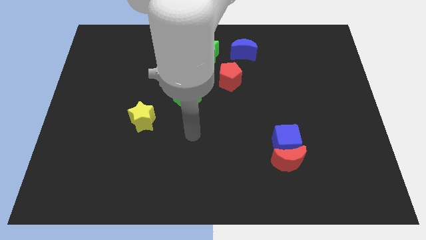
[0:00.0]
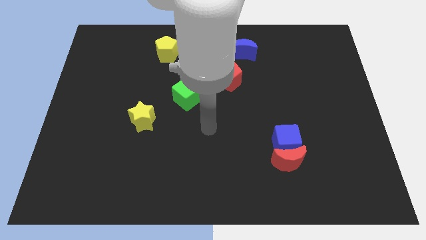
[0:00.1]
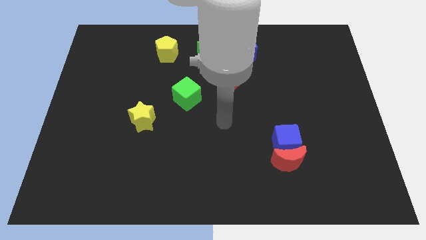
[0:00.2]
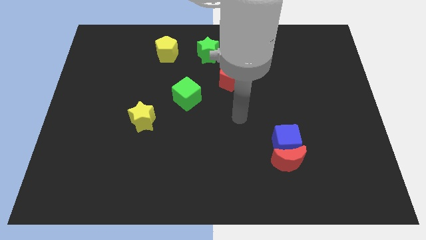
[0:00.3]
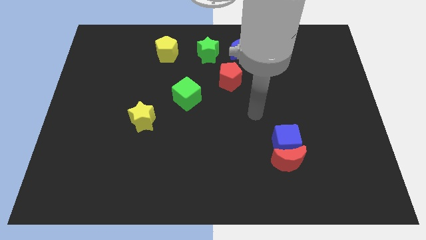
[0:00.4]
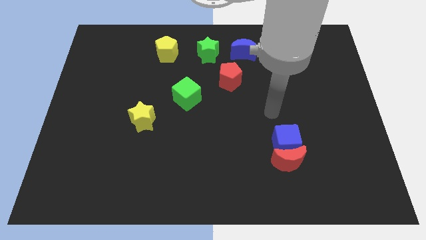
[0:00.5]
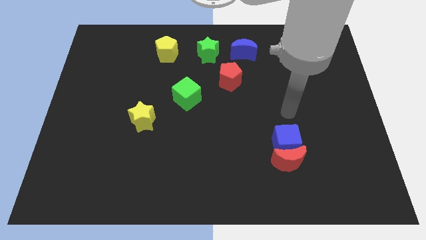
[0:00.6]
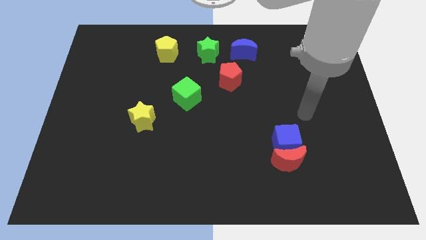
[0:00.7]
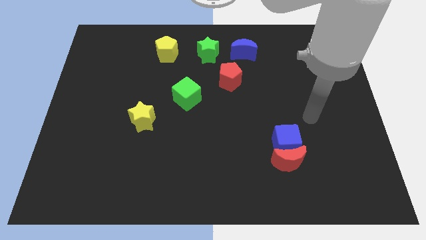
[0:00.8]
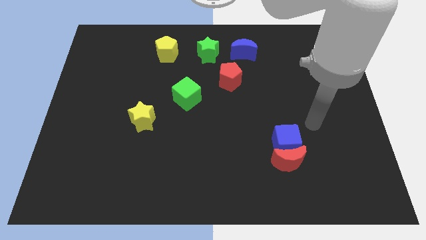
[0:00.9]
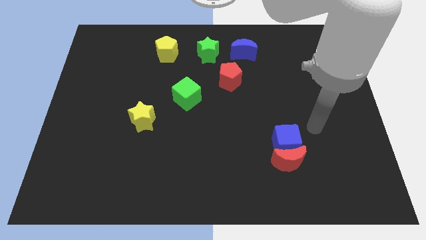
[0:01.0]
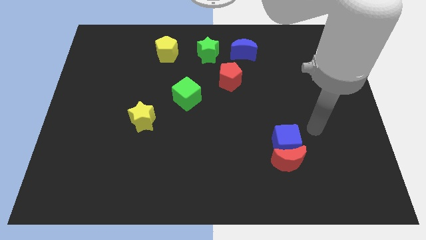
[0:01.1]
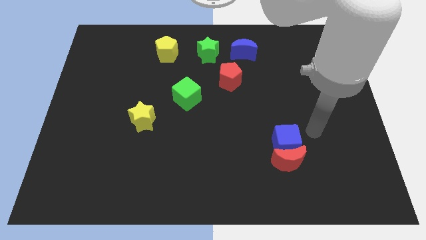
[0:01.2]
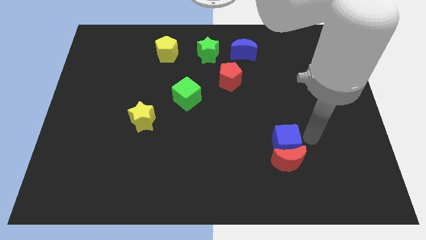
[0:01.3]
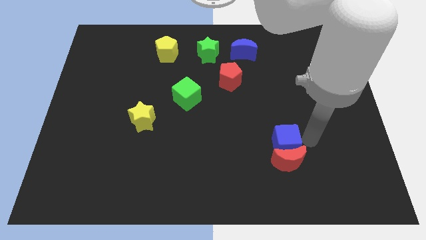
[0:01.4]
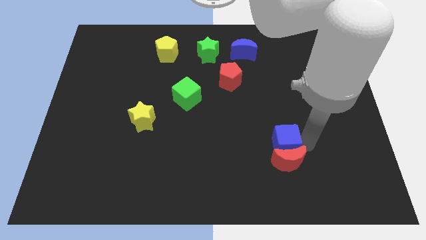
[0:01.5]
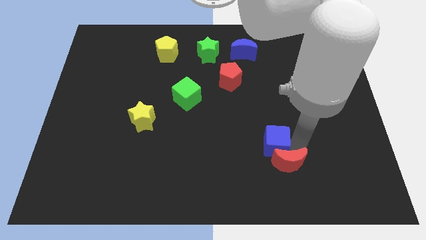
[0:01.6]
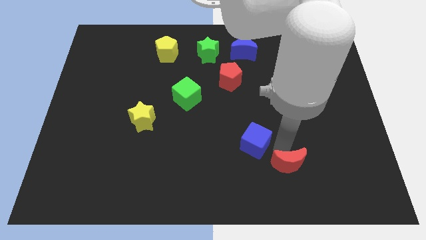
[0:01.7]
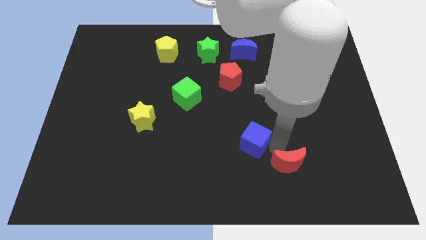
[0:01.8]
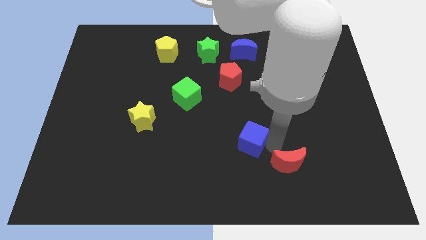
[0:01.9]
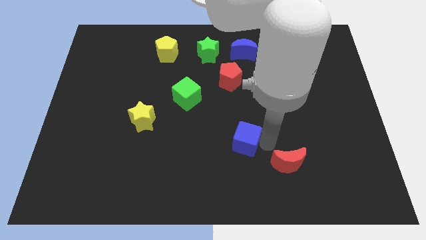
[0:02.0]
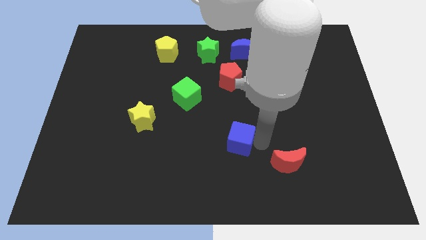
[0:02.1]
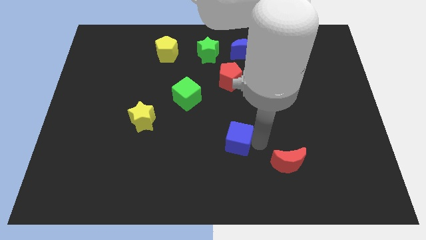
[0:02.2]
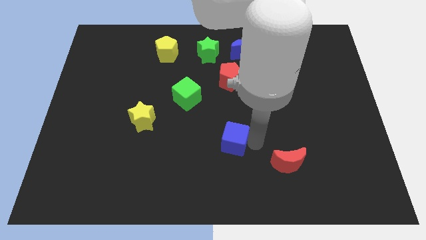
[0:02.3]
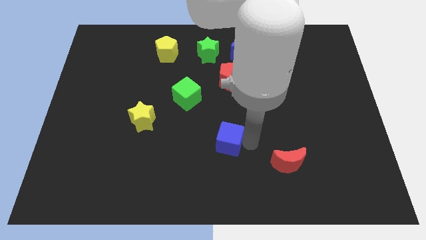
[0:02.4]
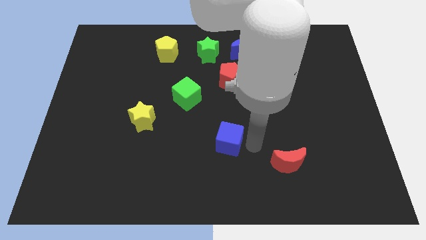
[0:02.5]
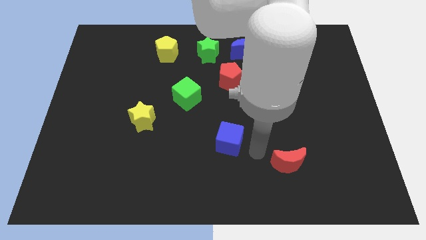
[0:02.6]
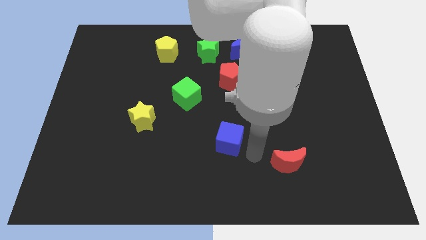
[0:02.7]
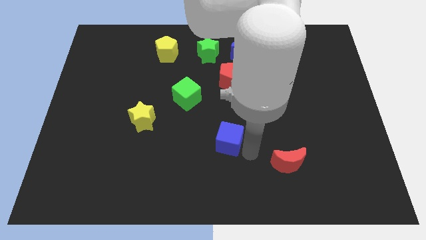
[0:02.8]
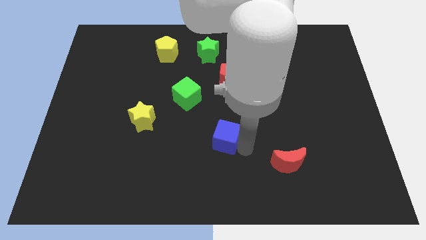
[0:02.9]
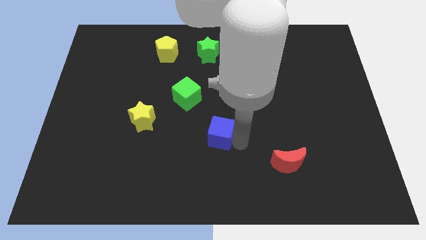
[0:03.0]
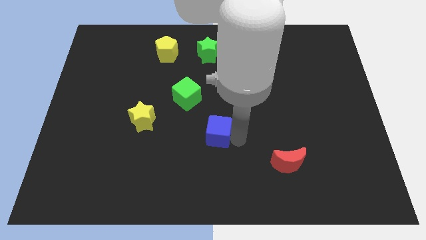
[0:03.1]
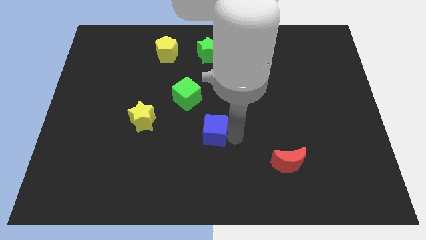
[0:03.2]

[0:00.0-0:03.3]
separate the blue cube from red crescent

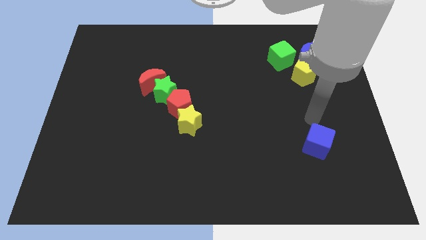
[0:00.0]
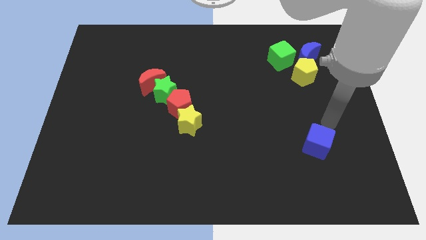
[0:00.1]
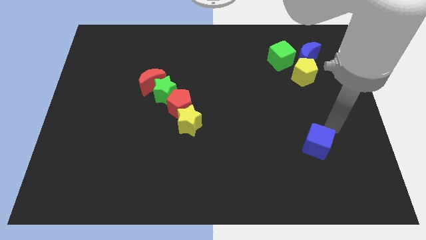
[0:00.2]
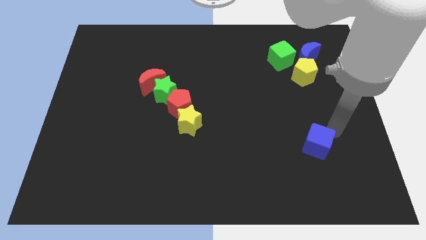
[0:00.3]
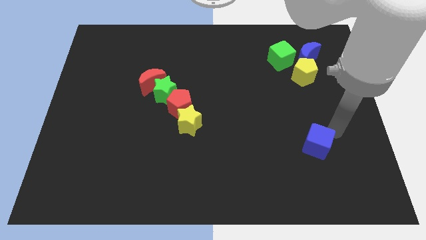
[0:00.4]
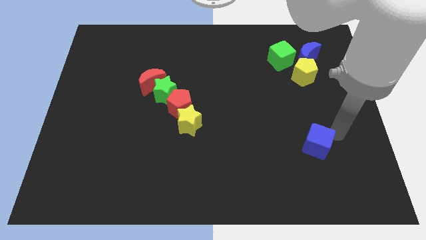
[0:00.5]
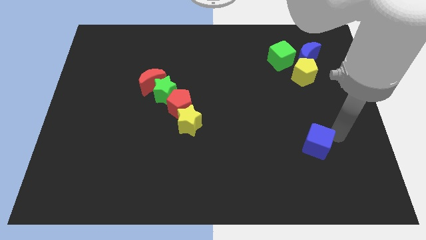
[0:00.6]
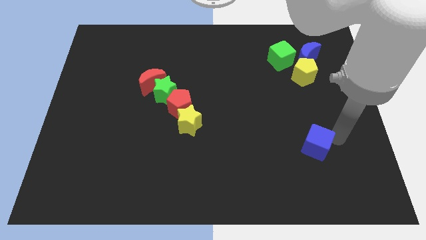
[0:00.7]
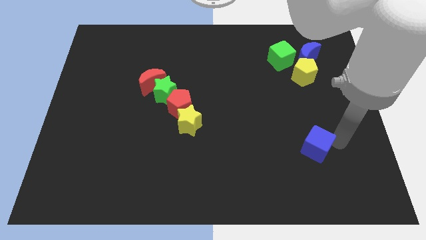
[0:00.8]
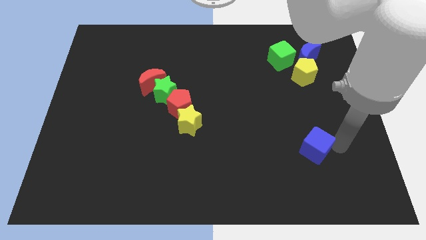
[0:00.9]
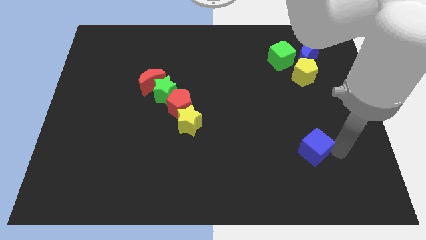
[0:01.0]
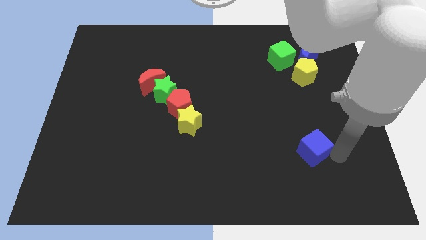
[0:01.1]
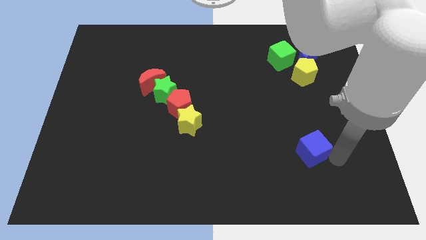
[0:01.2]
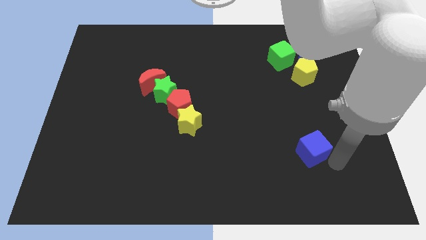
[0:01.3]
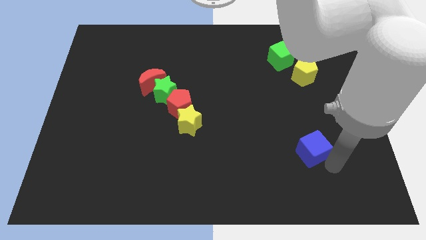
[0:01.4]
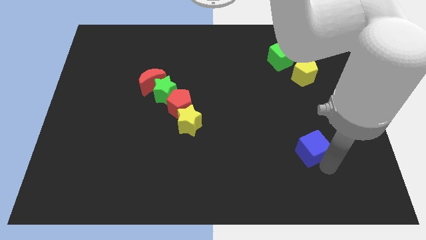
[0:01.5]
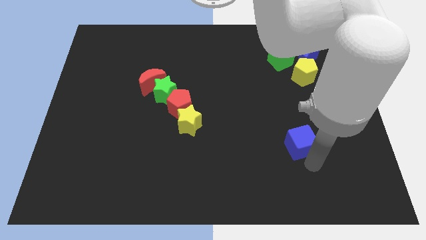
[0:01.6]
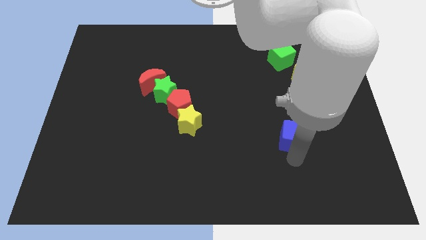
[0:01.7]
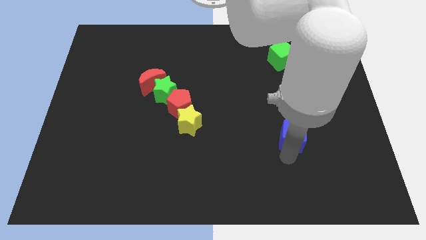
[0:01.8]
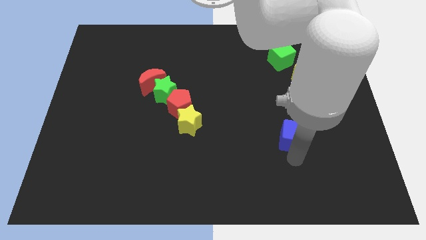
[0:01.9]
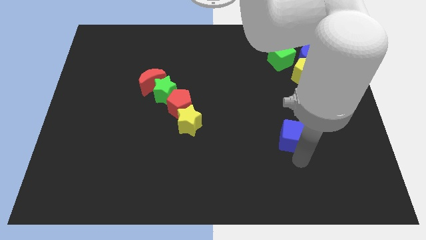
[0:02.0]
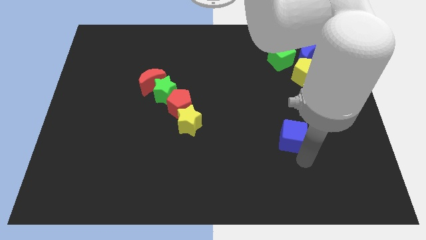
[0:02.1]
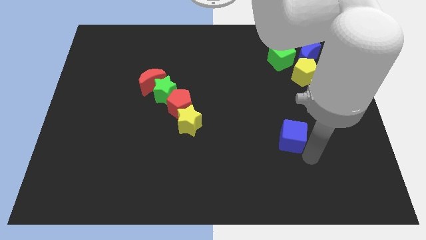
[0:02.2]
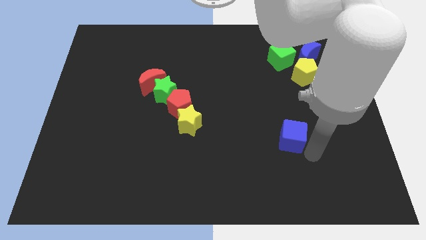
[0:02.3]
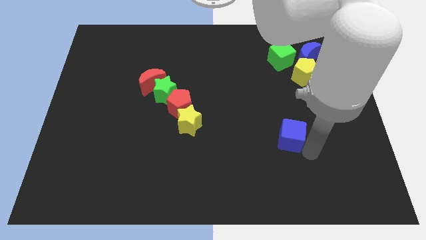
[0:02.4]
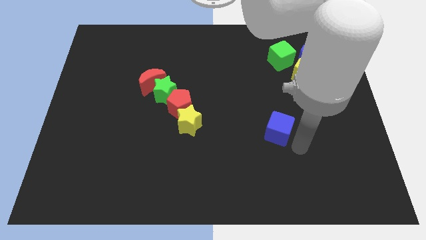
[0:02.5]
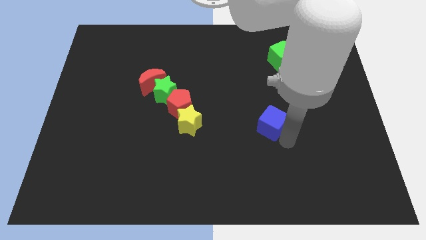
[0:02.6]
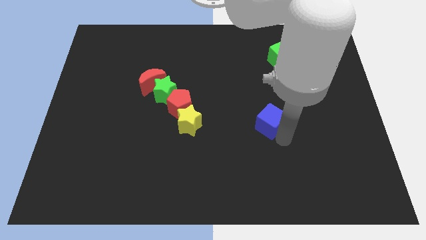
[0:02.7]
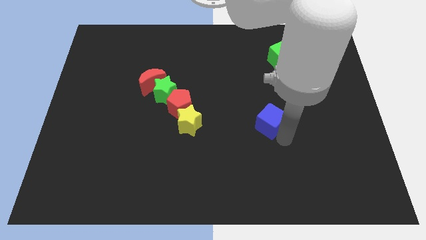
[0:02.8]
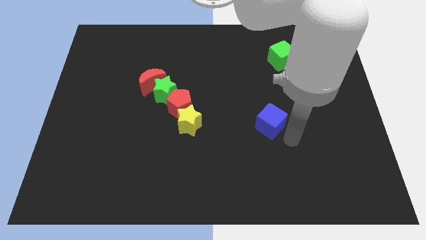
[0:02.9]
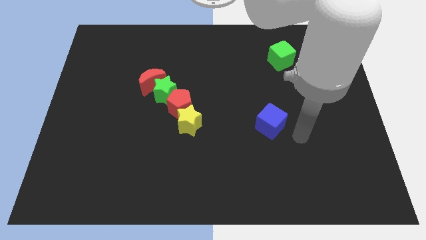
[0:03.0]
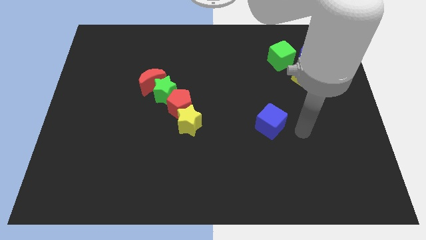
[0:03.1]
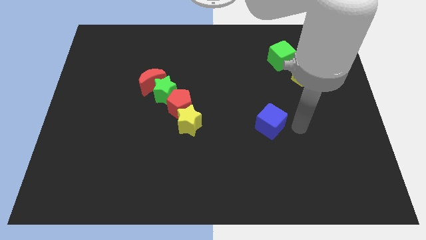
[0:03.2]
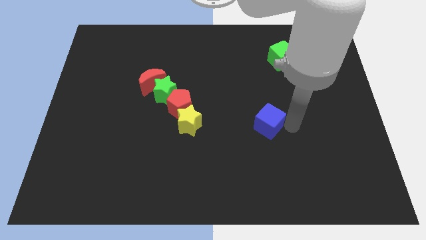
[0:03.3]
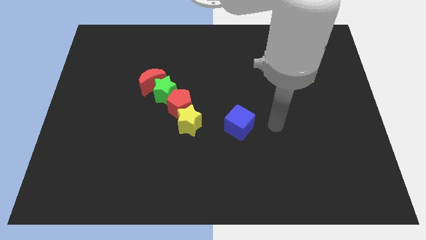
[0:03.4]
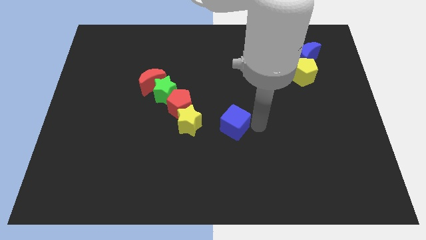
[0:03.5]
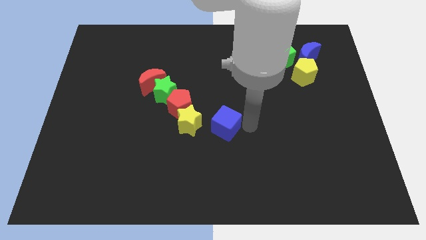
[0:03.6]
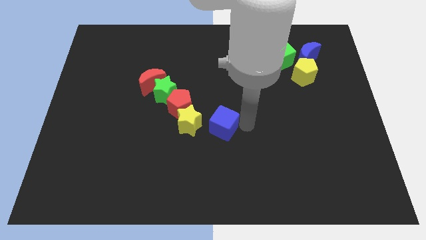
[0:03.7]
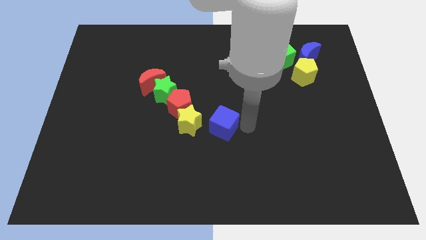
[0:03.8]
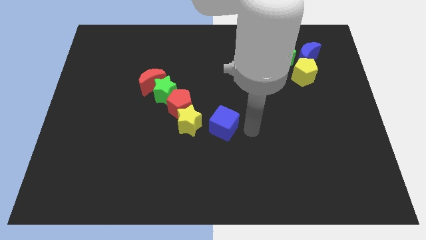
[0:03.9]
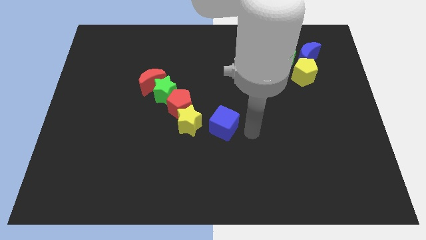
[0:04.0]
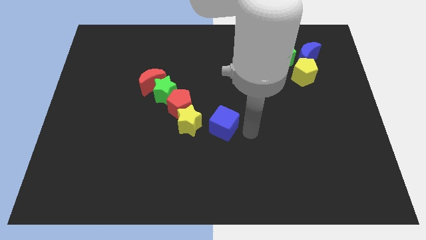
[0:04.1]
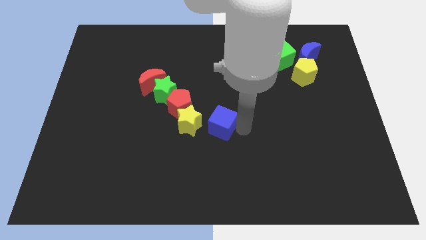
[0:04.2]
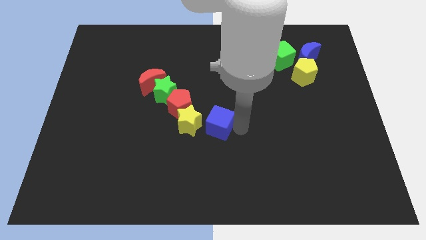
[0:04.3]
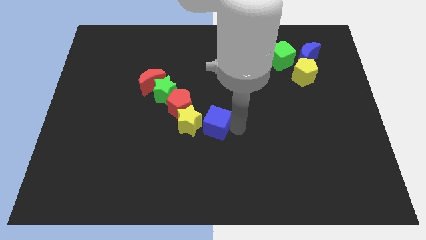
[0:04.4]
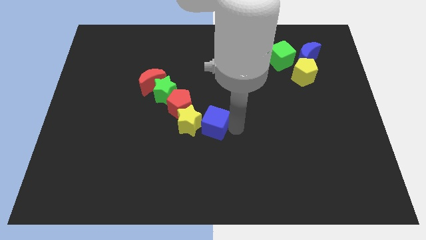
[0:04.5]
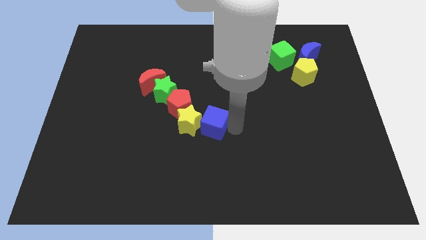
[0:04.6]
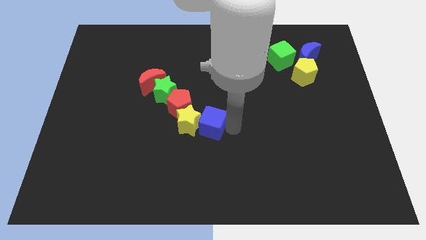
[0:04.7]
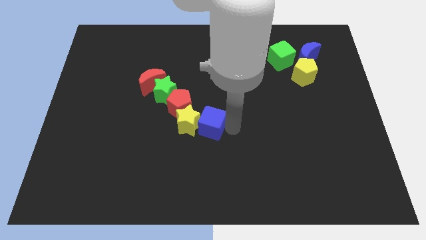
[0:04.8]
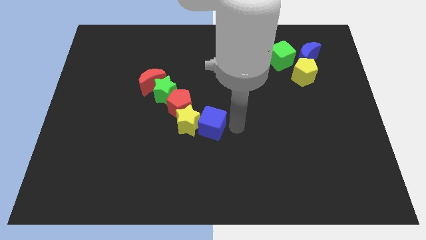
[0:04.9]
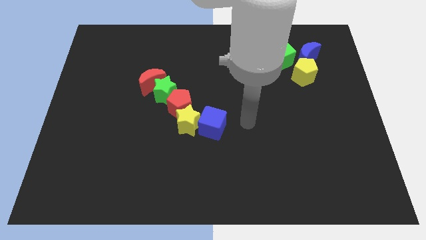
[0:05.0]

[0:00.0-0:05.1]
move the blue cube to the bottom center of the board

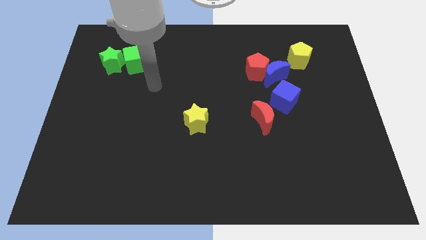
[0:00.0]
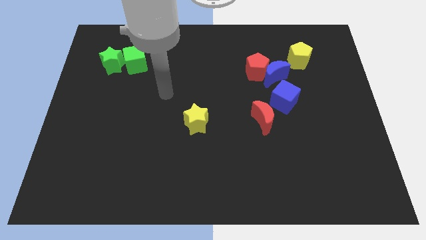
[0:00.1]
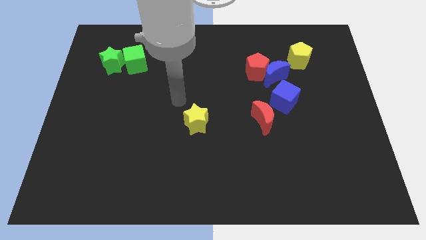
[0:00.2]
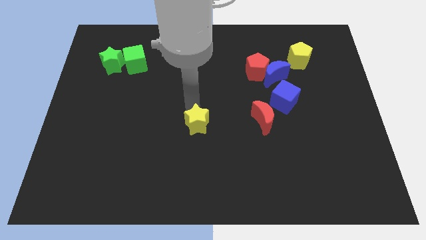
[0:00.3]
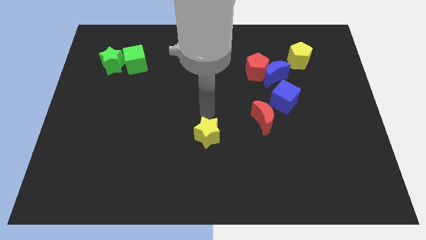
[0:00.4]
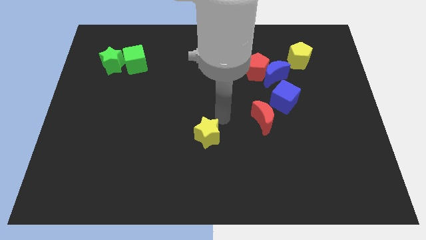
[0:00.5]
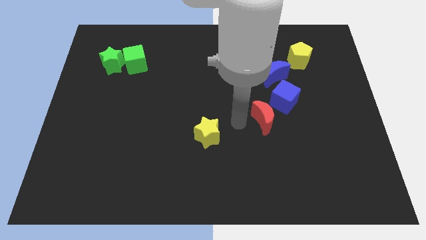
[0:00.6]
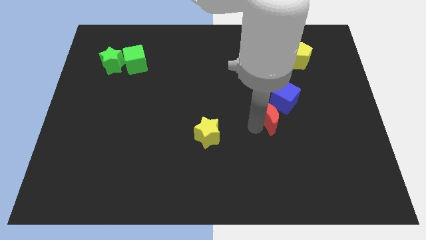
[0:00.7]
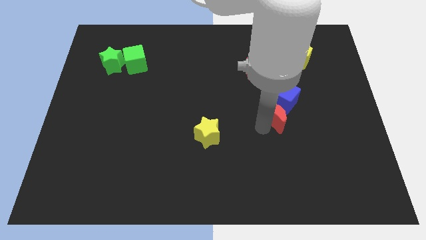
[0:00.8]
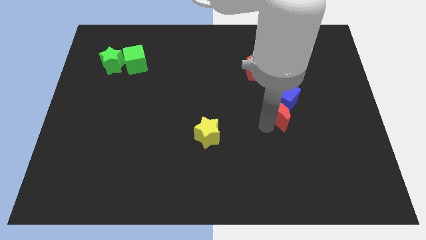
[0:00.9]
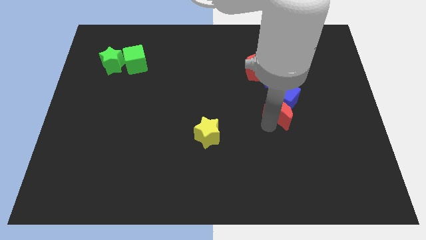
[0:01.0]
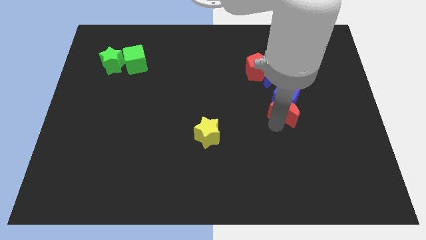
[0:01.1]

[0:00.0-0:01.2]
move the red moon into the blue cube
